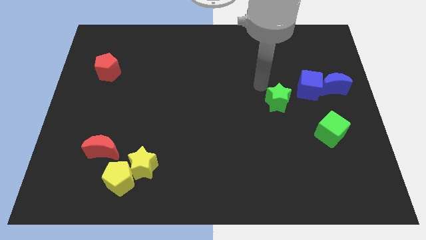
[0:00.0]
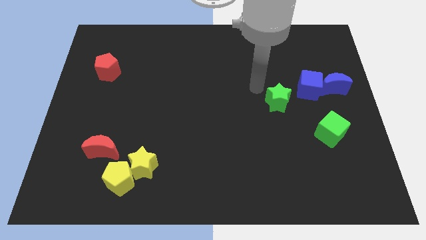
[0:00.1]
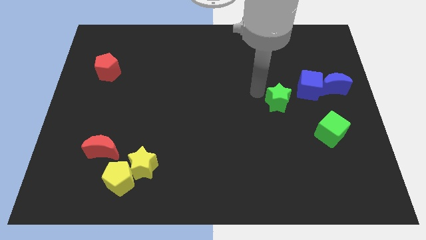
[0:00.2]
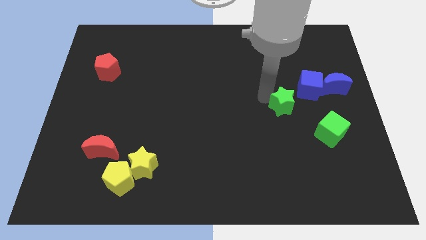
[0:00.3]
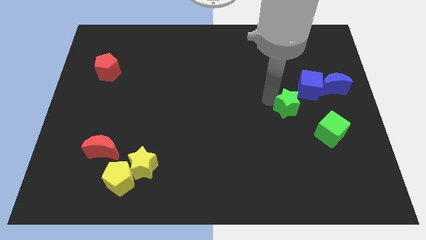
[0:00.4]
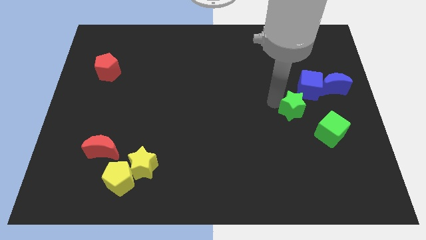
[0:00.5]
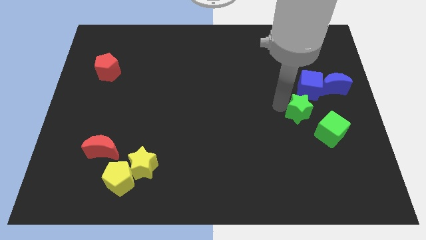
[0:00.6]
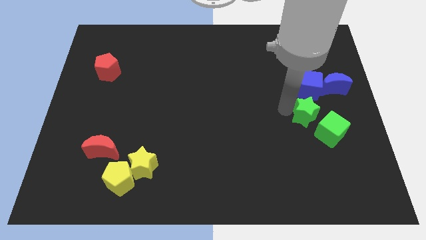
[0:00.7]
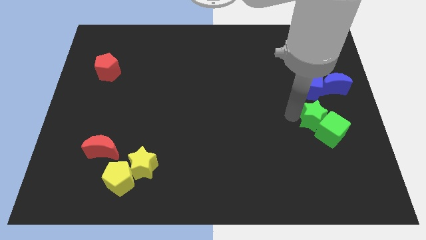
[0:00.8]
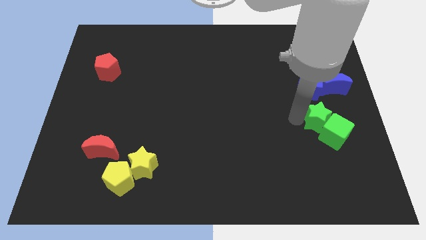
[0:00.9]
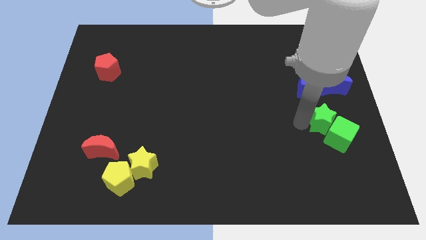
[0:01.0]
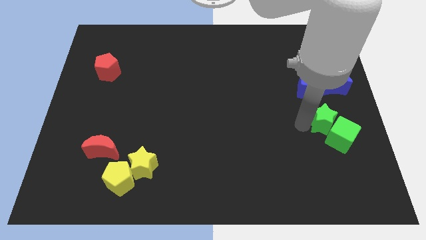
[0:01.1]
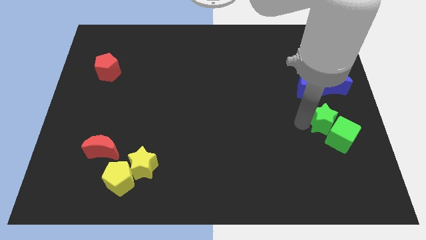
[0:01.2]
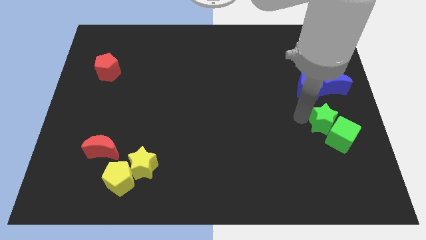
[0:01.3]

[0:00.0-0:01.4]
push the green star into the greeen cube

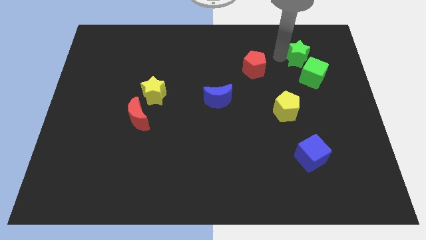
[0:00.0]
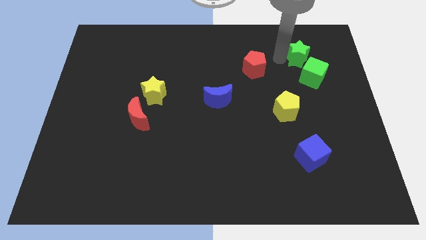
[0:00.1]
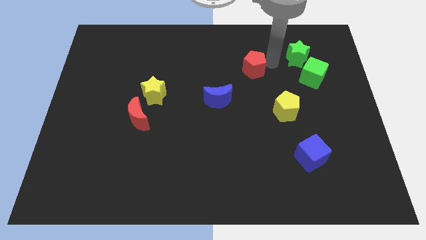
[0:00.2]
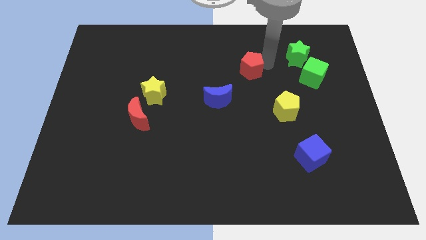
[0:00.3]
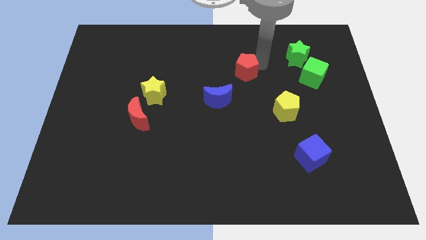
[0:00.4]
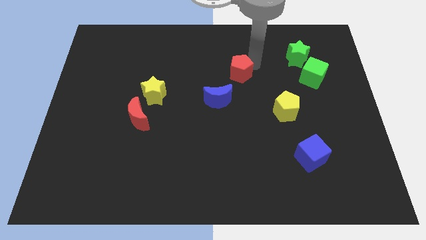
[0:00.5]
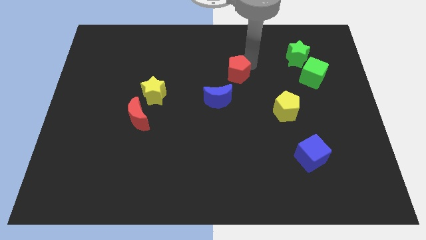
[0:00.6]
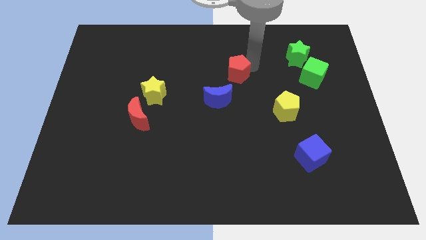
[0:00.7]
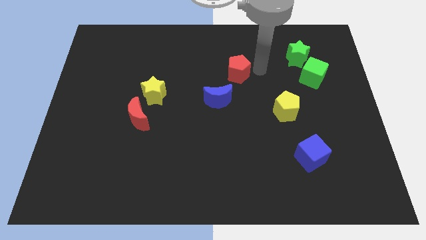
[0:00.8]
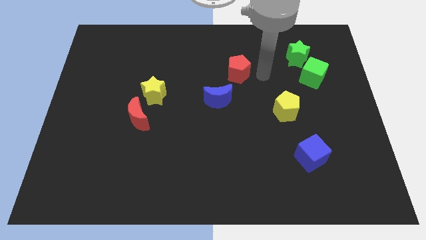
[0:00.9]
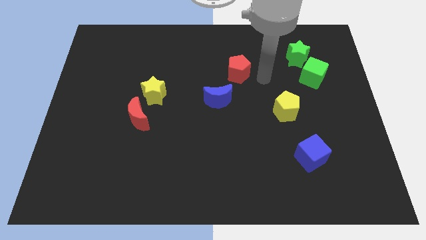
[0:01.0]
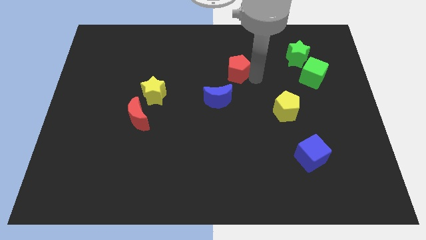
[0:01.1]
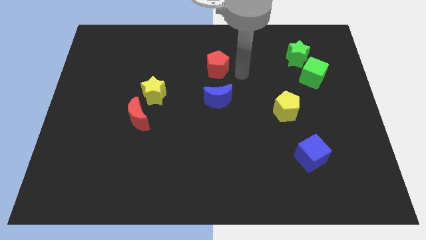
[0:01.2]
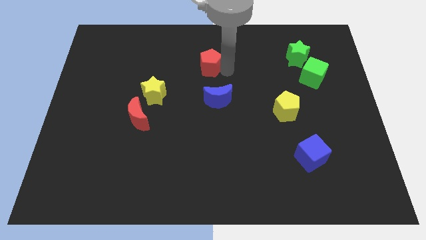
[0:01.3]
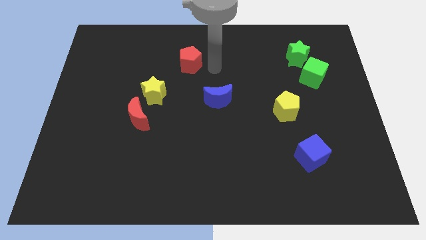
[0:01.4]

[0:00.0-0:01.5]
drag red pentagon towards left side of the board

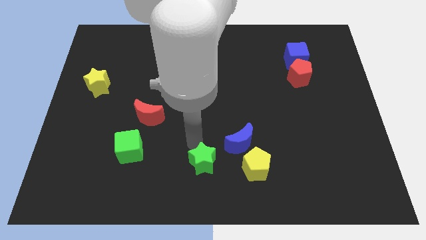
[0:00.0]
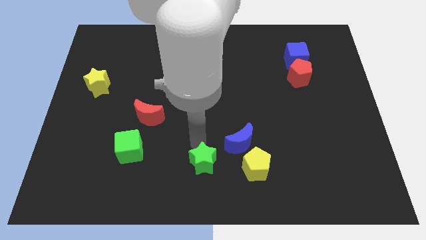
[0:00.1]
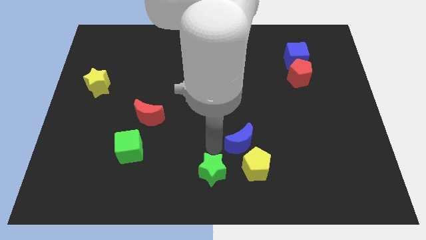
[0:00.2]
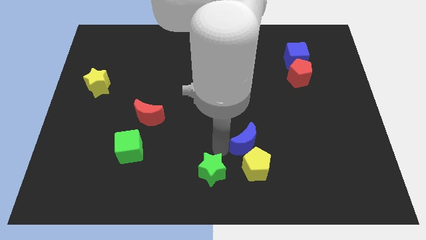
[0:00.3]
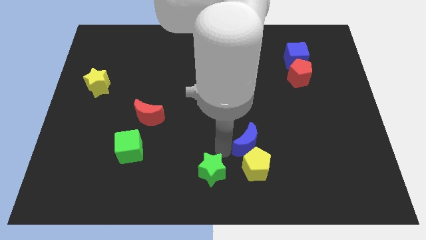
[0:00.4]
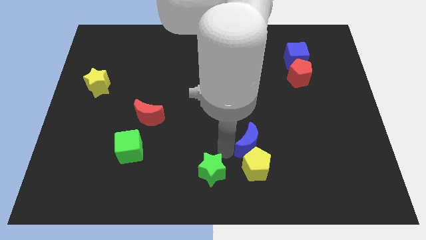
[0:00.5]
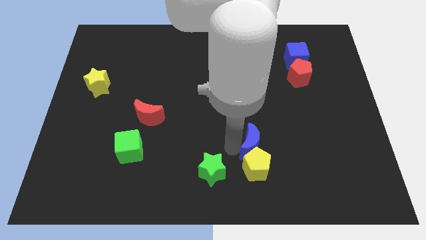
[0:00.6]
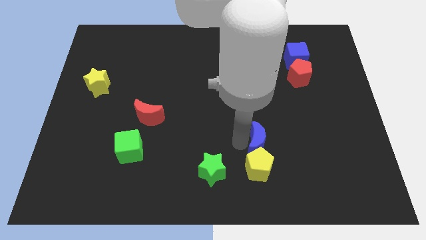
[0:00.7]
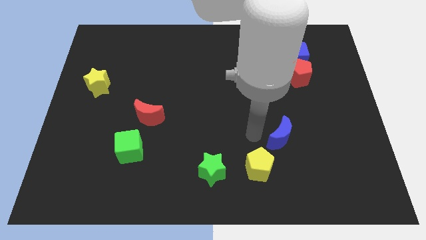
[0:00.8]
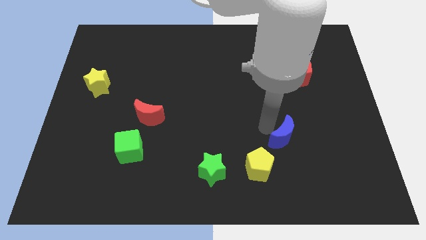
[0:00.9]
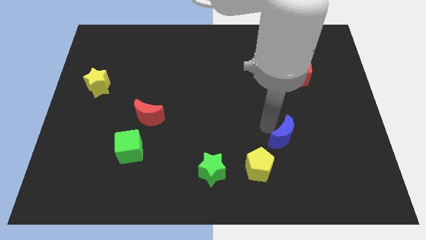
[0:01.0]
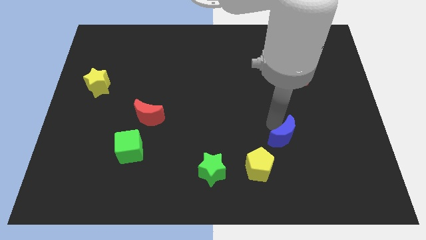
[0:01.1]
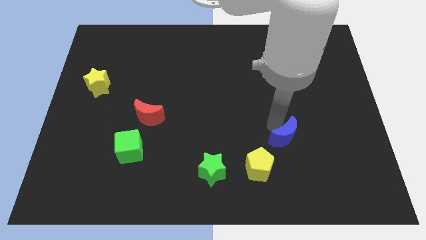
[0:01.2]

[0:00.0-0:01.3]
push blue moon towards right side of the board

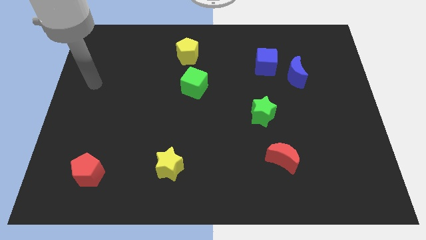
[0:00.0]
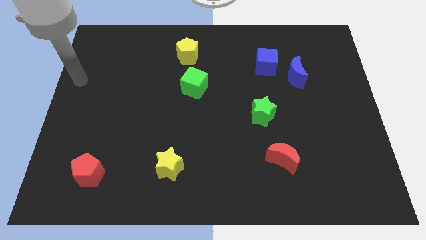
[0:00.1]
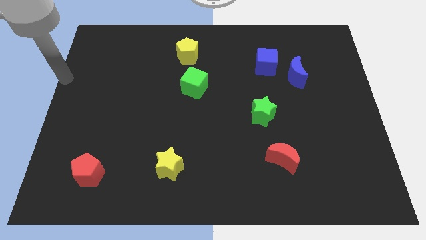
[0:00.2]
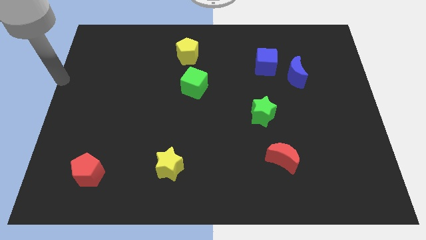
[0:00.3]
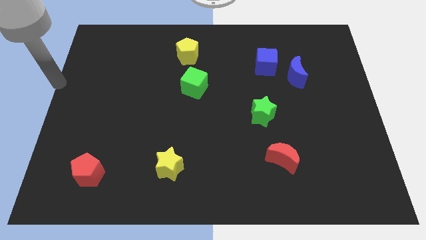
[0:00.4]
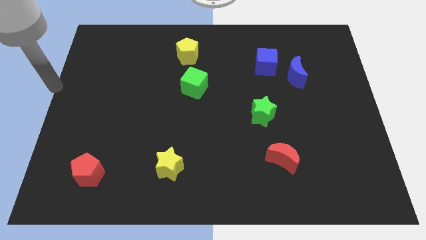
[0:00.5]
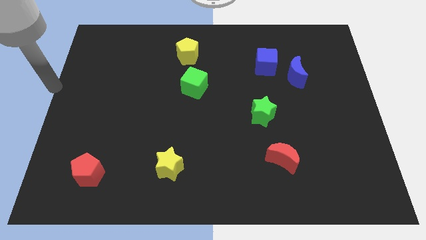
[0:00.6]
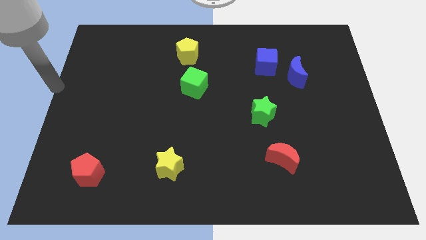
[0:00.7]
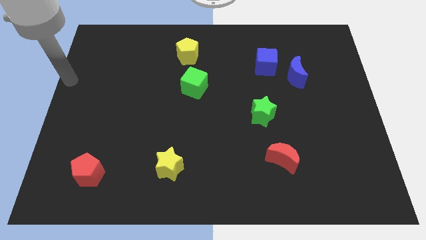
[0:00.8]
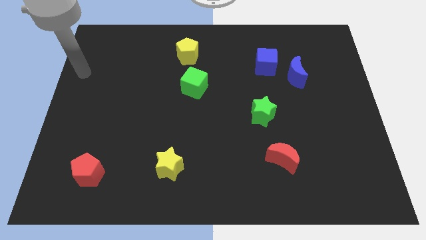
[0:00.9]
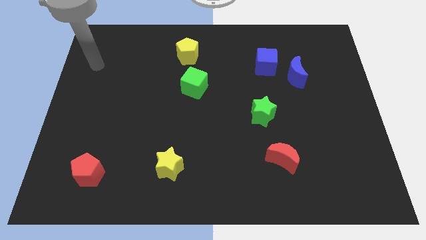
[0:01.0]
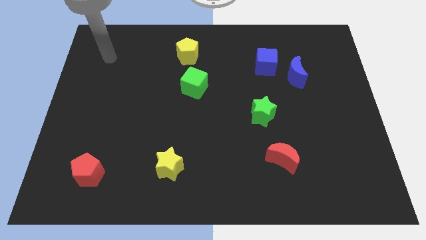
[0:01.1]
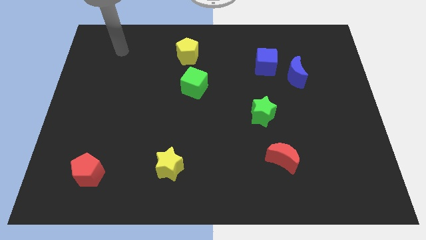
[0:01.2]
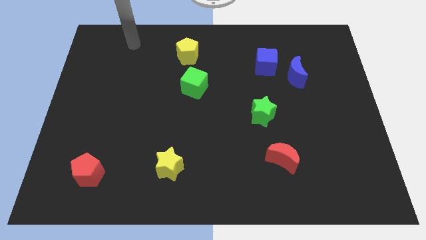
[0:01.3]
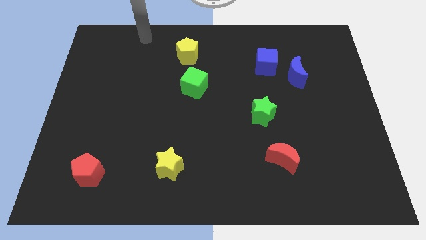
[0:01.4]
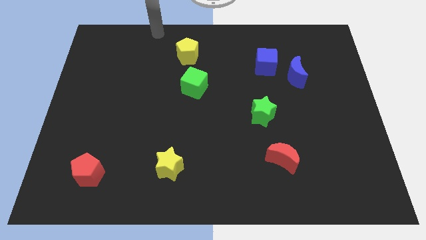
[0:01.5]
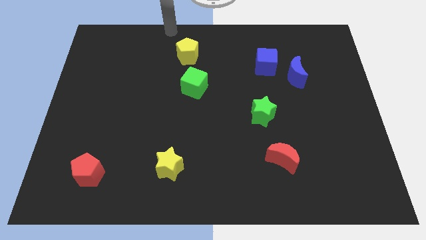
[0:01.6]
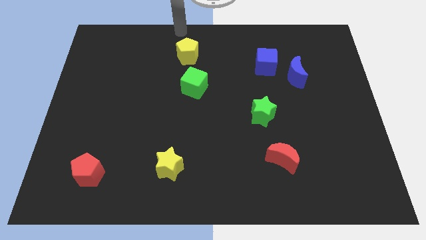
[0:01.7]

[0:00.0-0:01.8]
place your hand at the top of the yellow pentagon

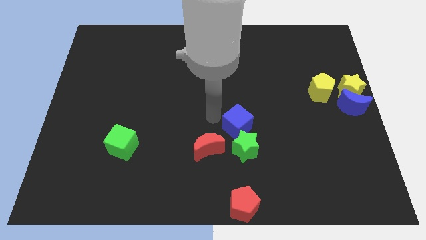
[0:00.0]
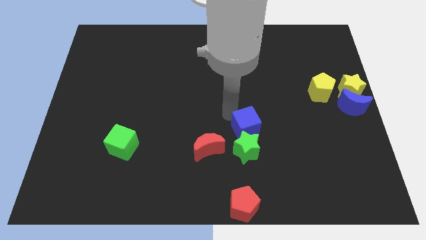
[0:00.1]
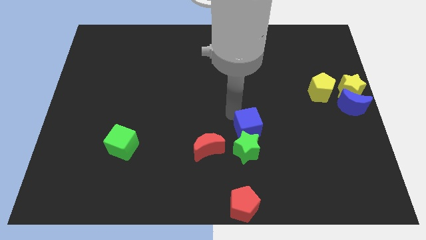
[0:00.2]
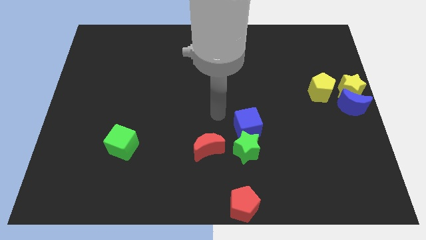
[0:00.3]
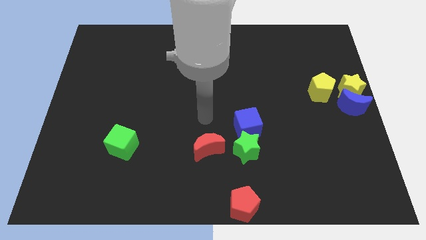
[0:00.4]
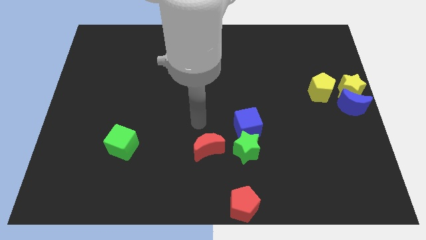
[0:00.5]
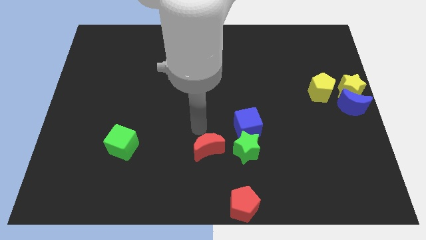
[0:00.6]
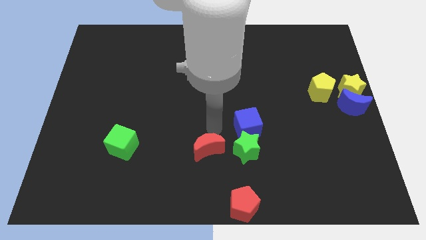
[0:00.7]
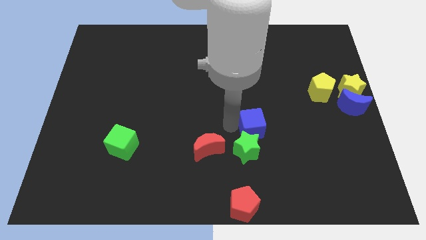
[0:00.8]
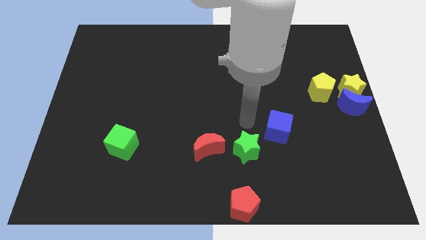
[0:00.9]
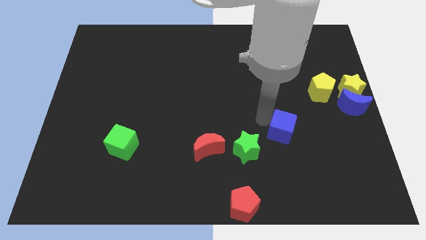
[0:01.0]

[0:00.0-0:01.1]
move the blue cube to the top right of the green star

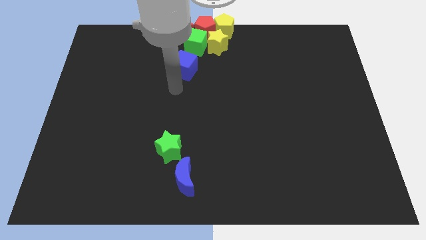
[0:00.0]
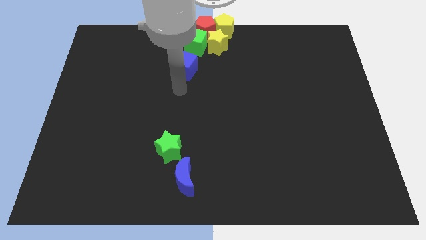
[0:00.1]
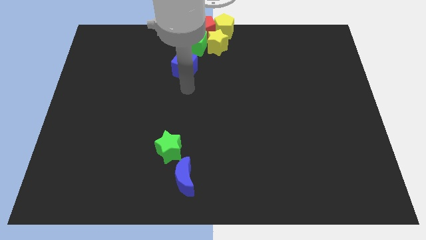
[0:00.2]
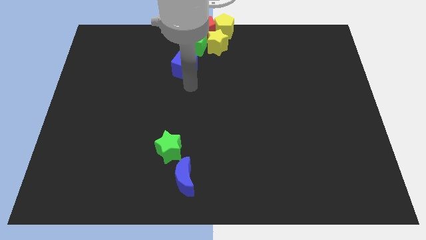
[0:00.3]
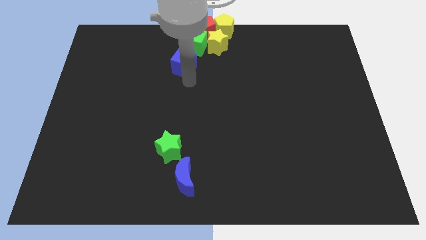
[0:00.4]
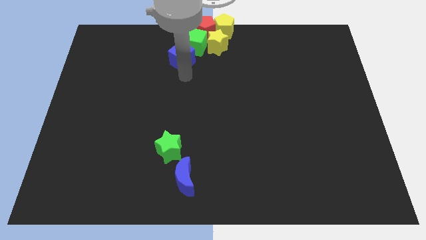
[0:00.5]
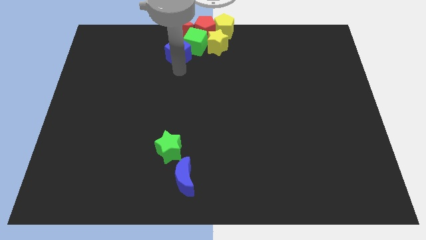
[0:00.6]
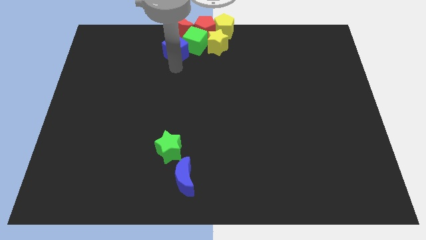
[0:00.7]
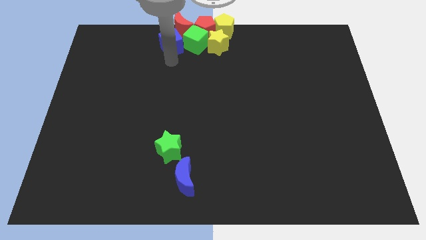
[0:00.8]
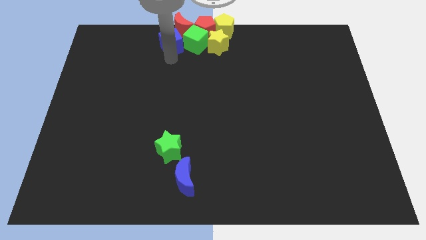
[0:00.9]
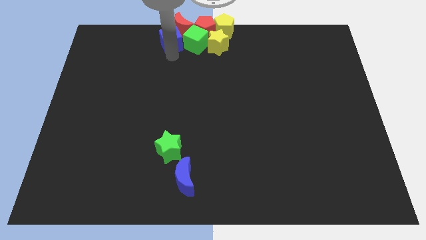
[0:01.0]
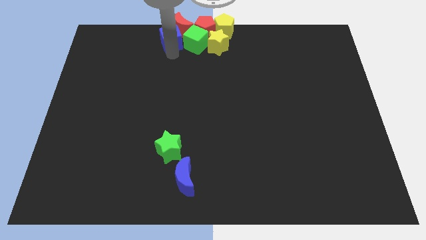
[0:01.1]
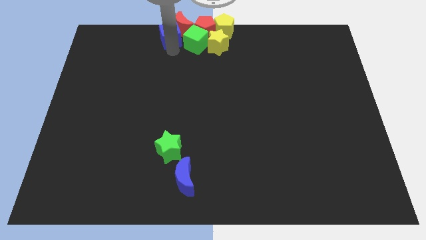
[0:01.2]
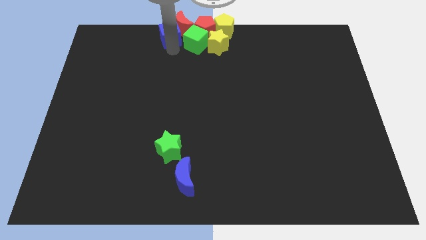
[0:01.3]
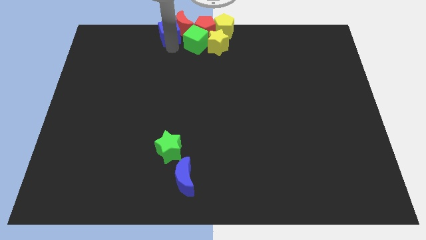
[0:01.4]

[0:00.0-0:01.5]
move the blue cube into the red crescent

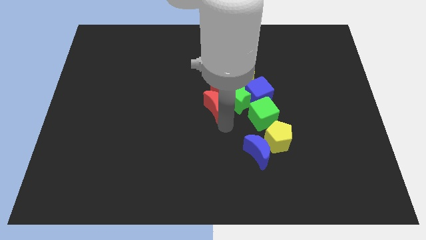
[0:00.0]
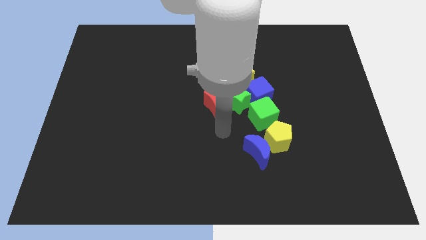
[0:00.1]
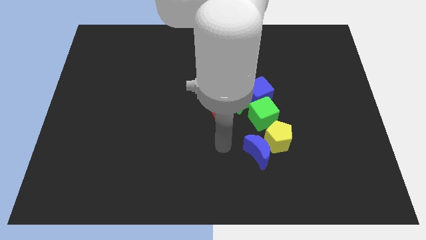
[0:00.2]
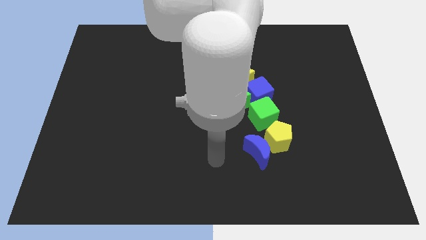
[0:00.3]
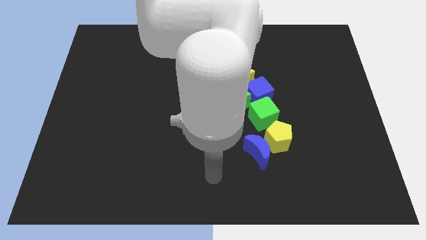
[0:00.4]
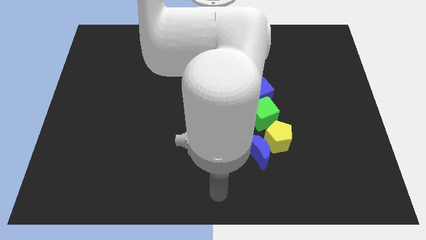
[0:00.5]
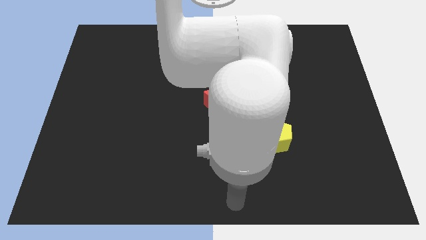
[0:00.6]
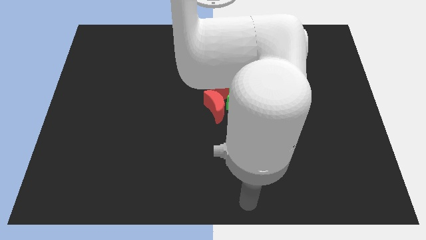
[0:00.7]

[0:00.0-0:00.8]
move the arm towards the blue crescent
